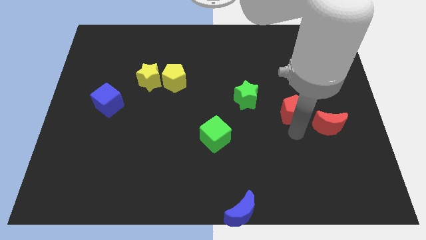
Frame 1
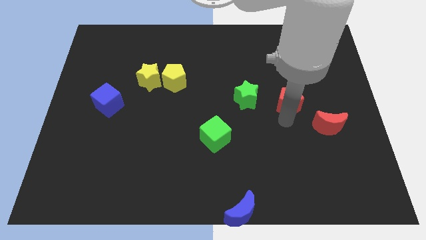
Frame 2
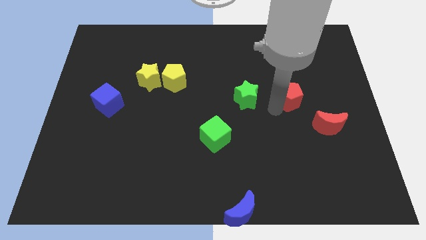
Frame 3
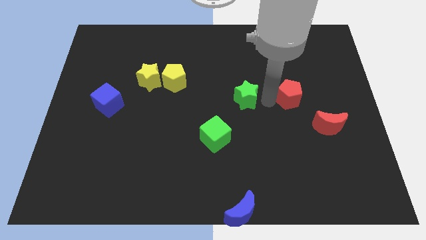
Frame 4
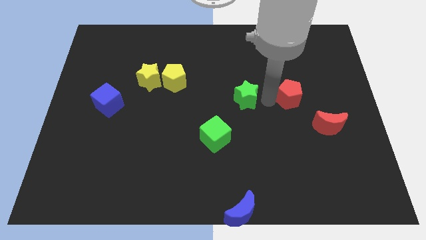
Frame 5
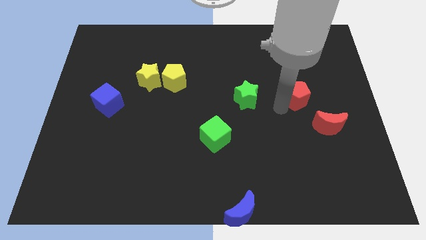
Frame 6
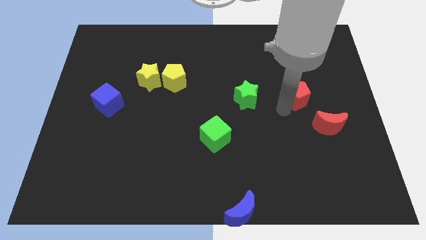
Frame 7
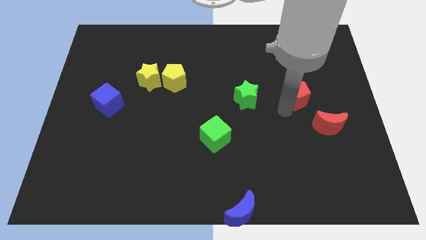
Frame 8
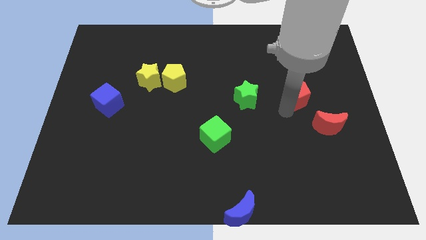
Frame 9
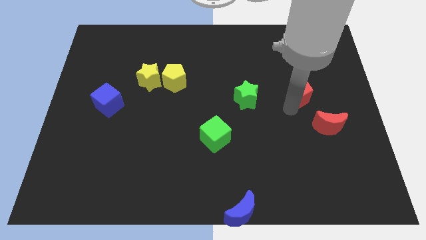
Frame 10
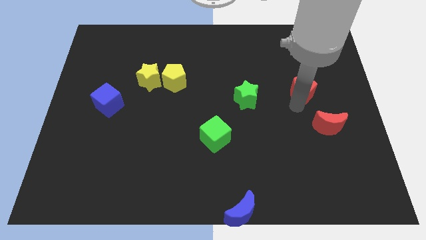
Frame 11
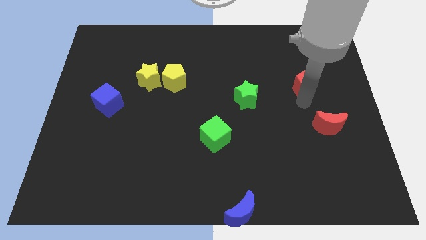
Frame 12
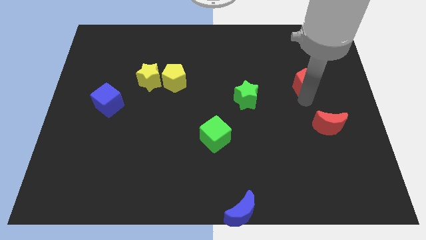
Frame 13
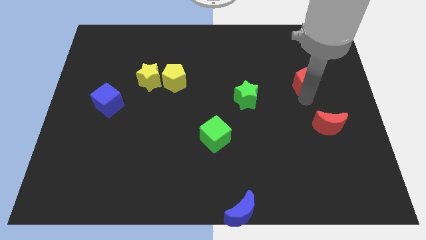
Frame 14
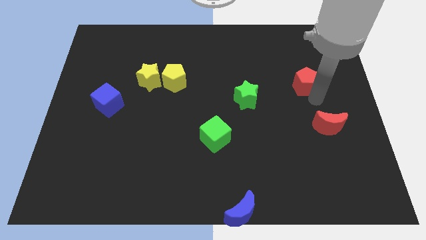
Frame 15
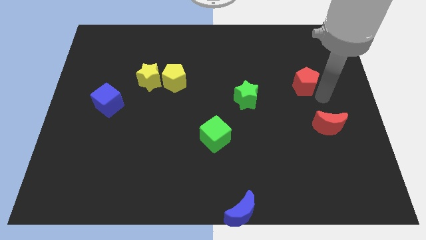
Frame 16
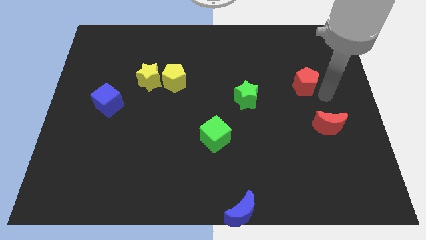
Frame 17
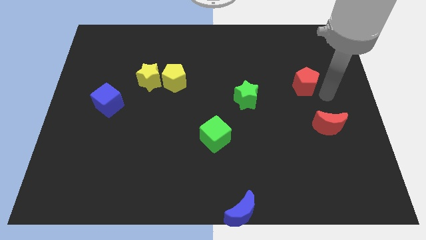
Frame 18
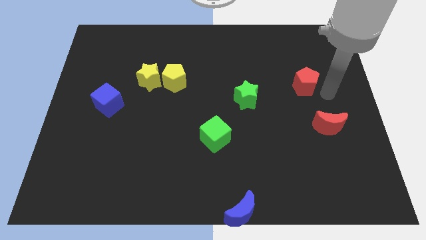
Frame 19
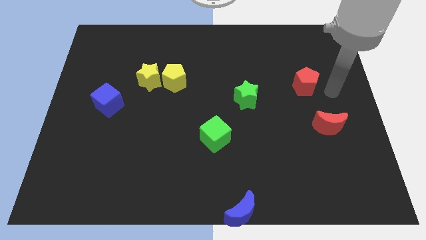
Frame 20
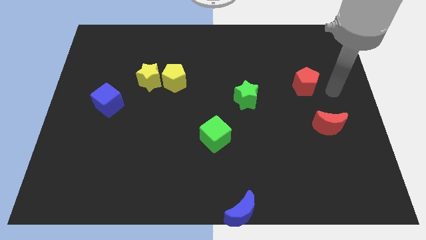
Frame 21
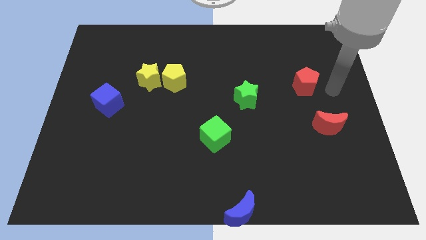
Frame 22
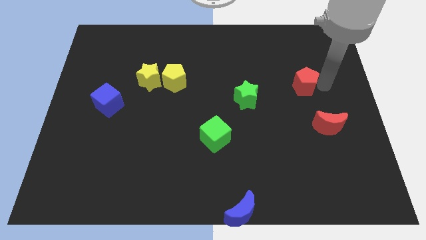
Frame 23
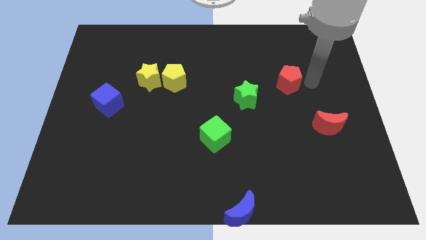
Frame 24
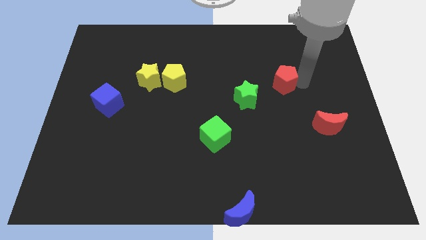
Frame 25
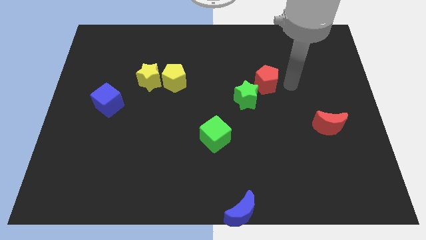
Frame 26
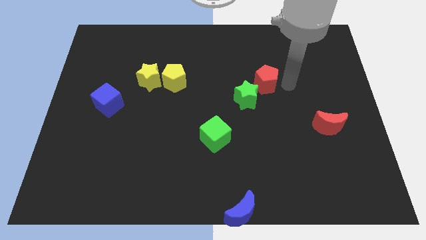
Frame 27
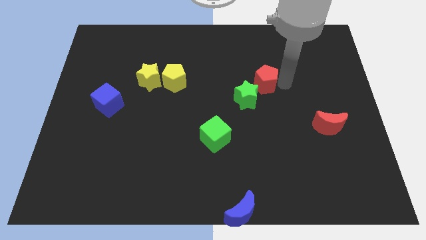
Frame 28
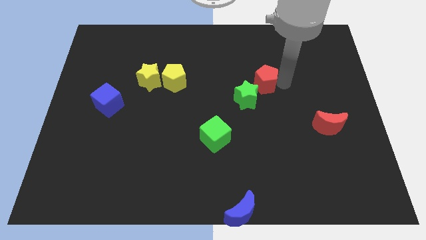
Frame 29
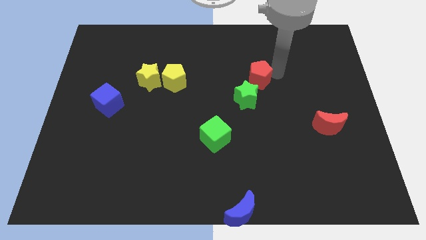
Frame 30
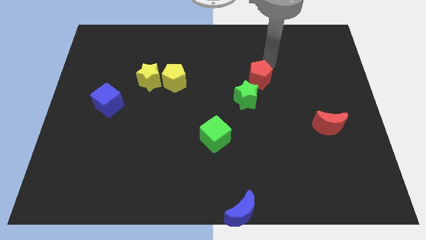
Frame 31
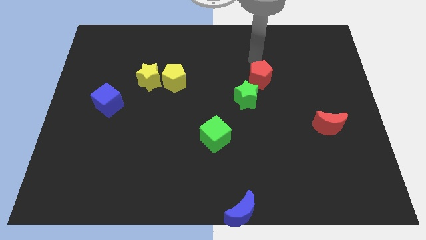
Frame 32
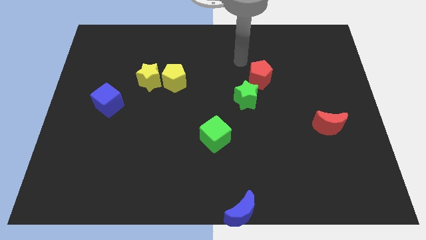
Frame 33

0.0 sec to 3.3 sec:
move the red pentagon diagonal above the green star

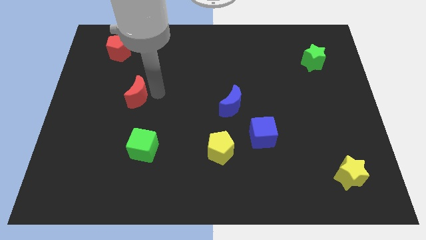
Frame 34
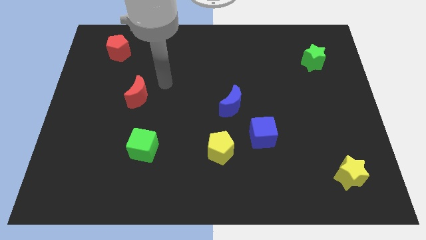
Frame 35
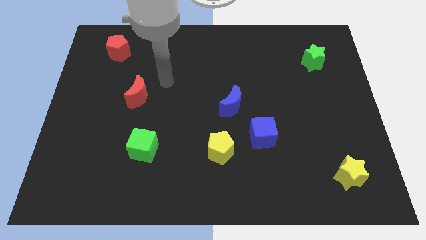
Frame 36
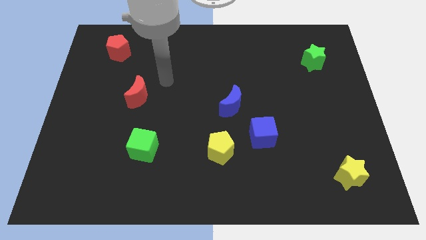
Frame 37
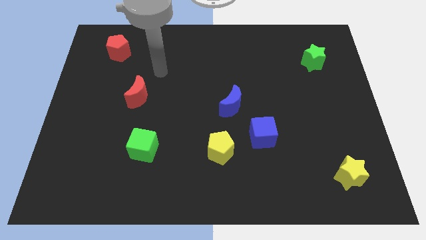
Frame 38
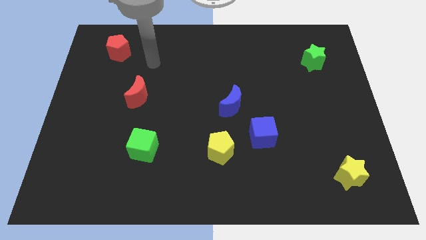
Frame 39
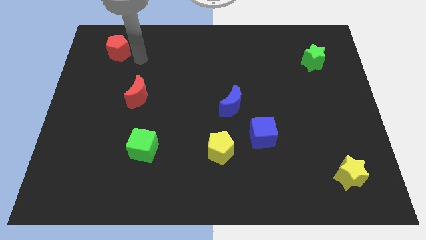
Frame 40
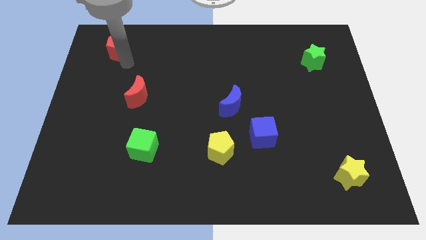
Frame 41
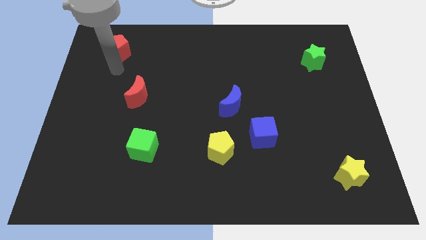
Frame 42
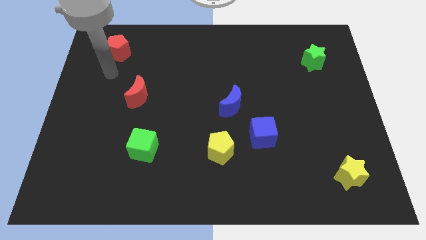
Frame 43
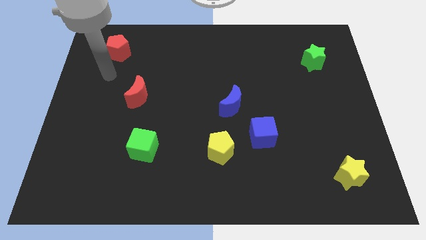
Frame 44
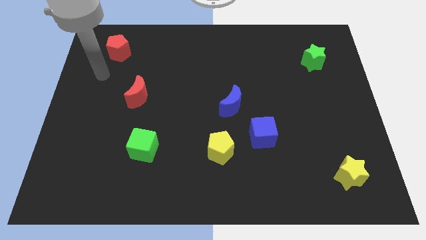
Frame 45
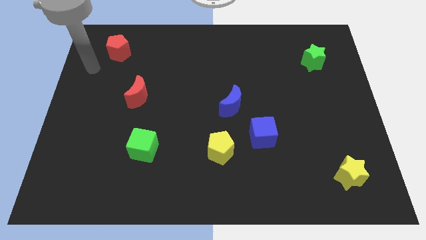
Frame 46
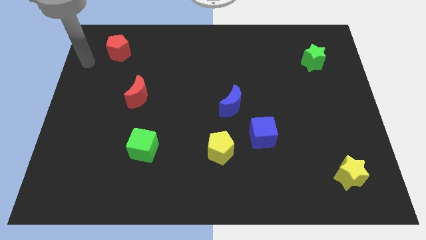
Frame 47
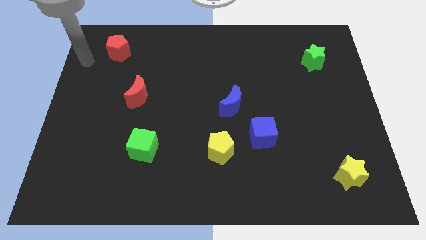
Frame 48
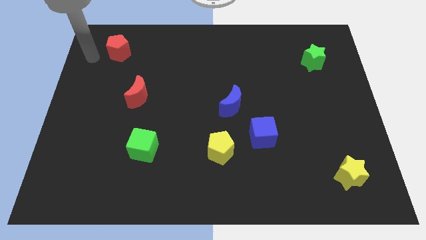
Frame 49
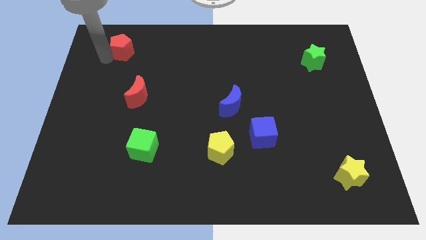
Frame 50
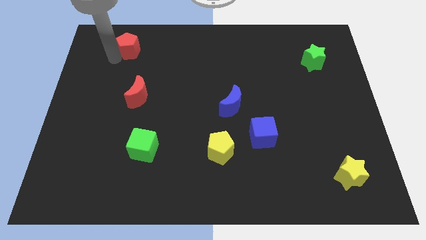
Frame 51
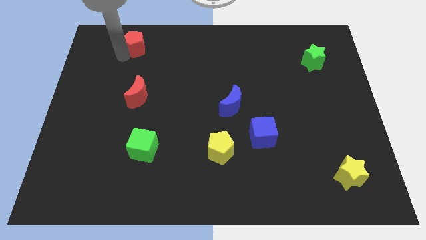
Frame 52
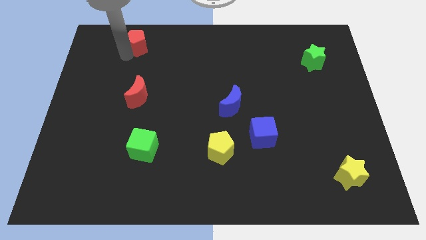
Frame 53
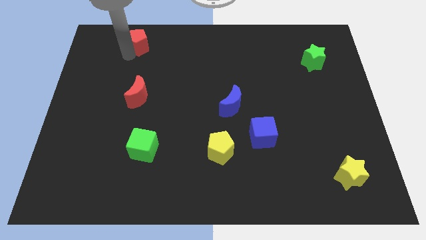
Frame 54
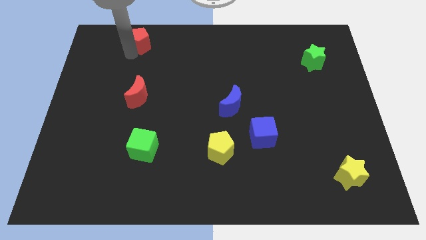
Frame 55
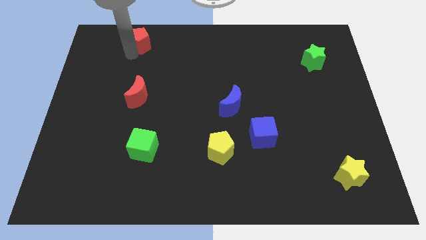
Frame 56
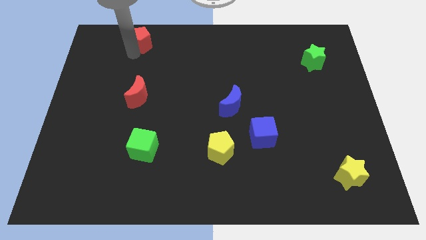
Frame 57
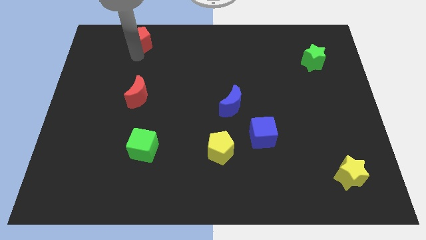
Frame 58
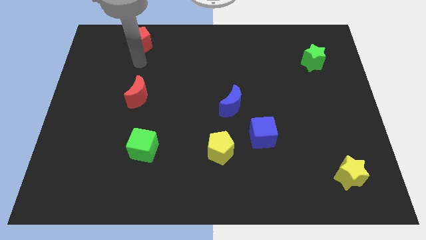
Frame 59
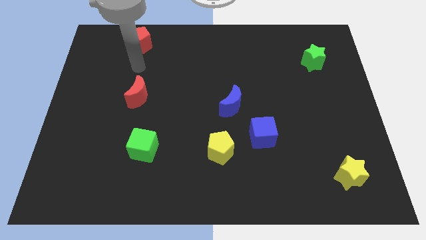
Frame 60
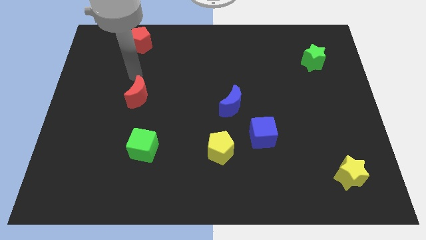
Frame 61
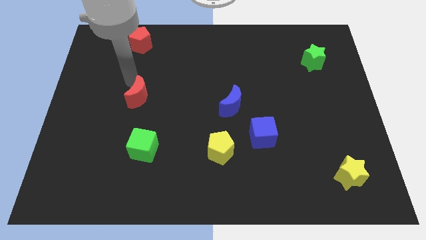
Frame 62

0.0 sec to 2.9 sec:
push the red pentagon to the top of the board

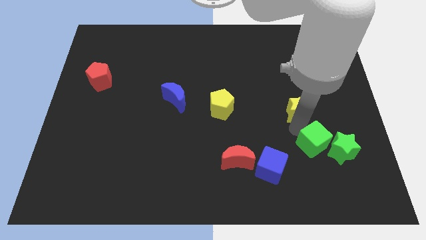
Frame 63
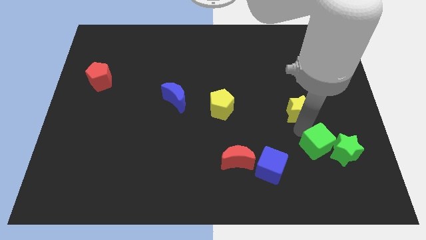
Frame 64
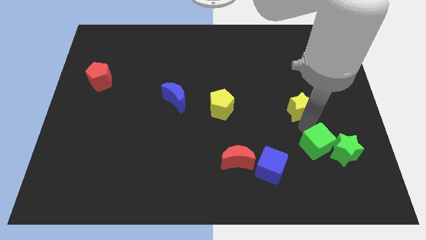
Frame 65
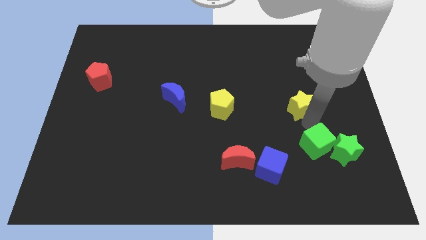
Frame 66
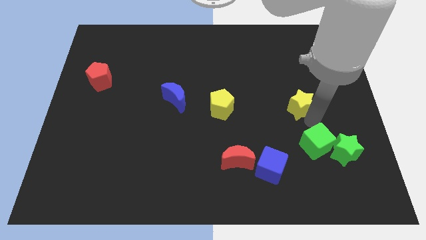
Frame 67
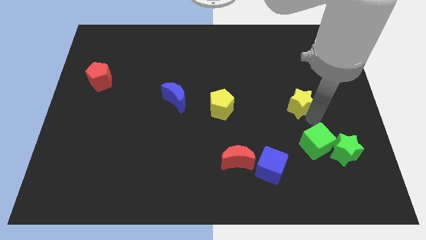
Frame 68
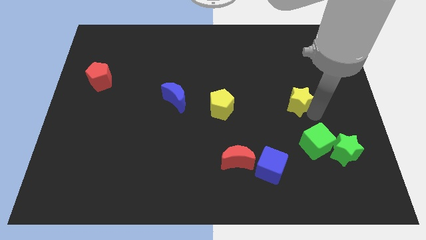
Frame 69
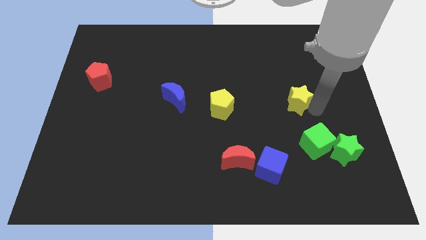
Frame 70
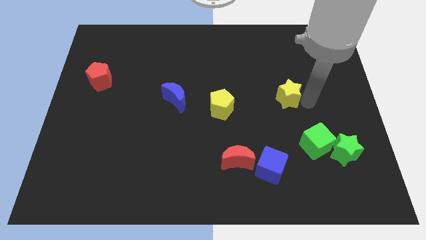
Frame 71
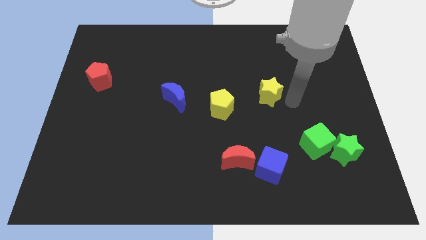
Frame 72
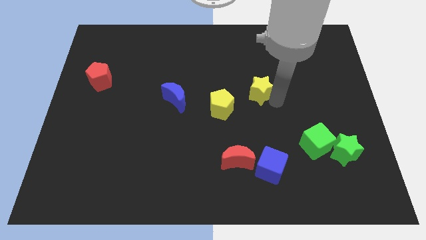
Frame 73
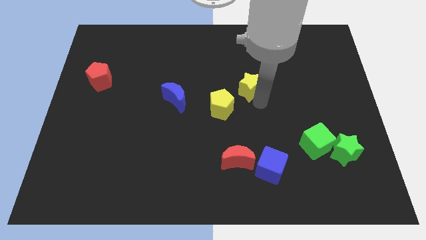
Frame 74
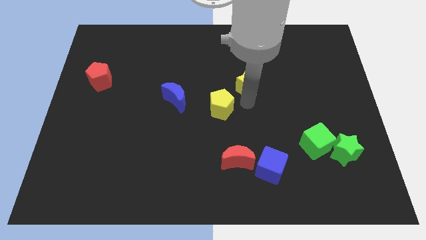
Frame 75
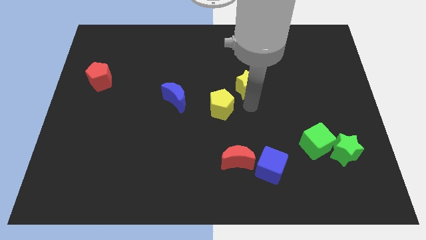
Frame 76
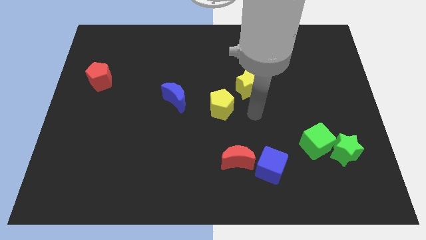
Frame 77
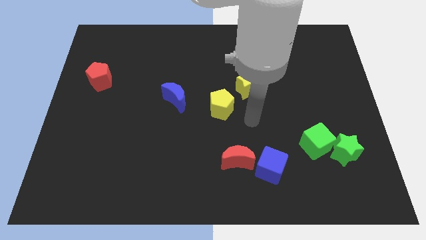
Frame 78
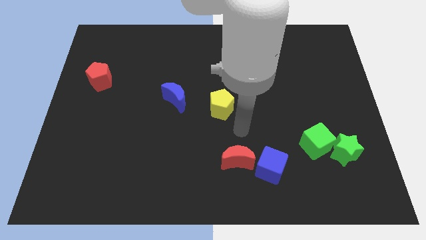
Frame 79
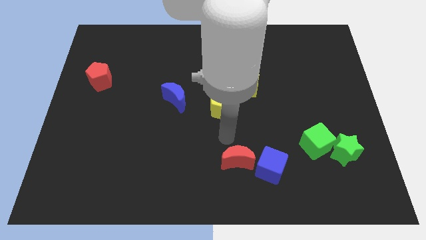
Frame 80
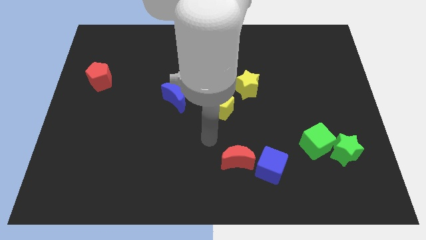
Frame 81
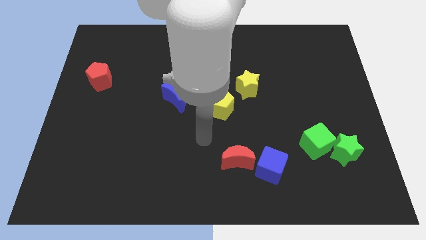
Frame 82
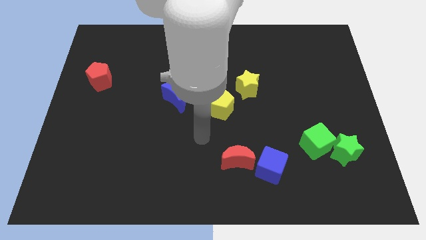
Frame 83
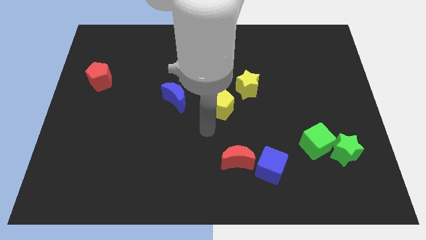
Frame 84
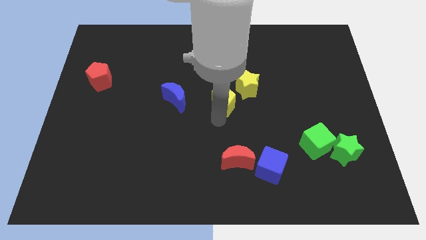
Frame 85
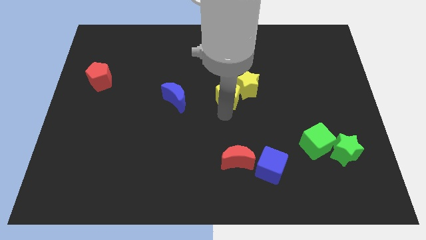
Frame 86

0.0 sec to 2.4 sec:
place the yellow star towards the top right of the yellow pentagon

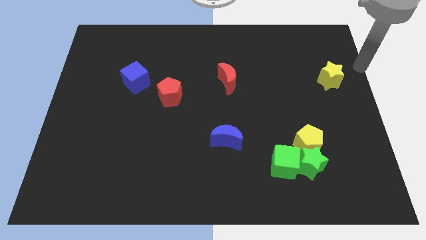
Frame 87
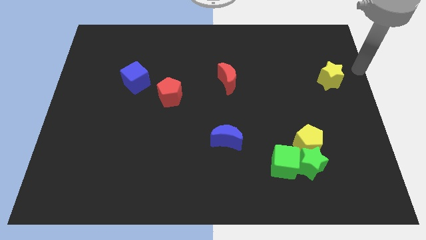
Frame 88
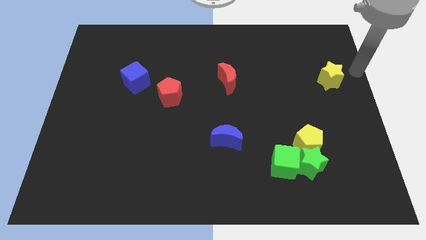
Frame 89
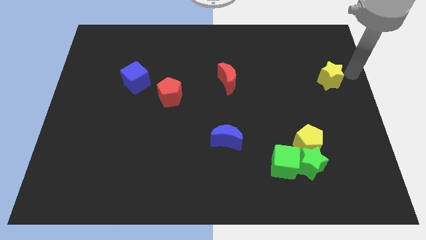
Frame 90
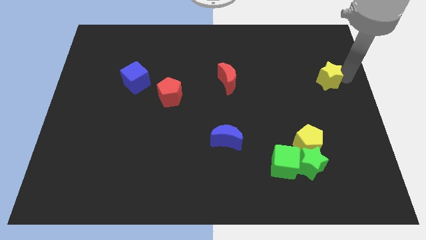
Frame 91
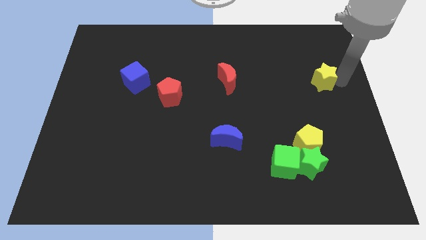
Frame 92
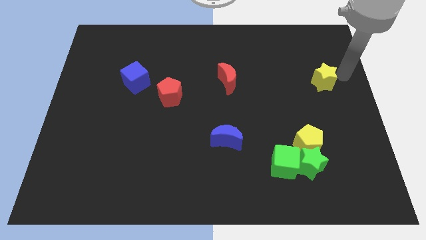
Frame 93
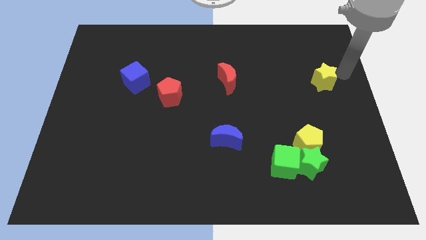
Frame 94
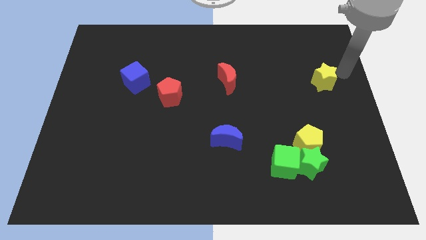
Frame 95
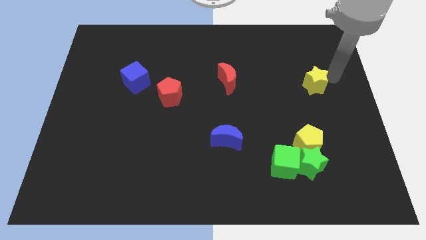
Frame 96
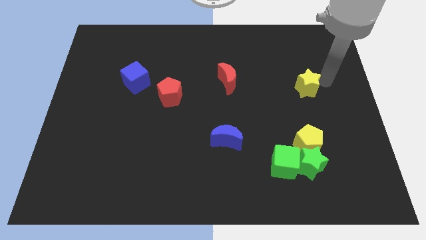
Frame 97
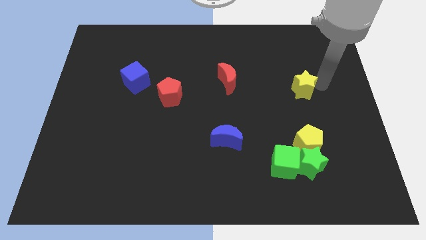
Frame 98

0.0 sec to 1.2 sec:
push the yellow star to the top of the yellow pentagon
